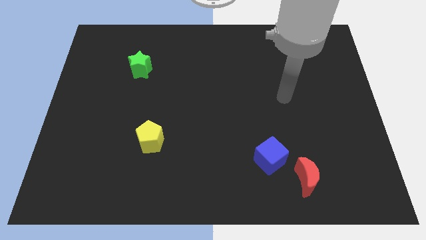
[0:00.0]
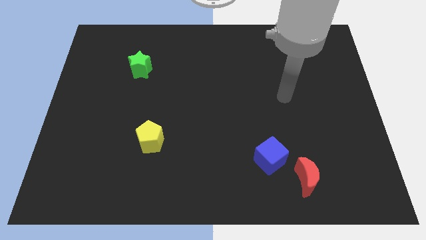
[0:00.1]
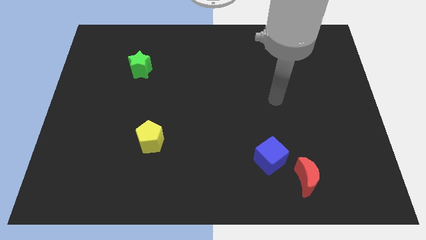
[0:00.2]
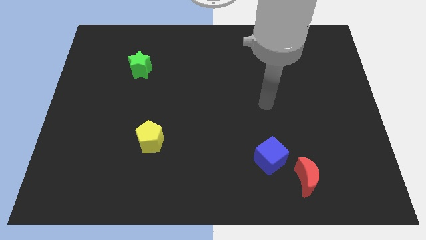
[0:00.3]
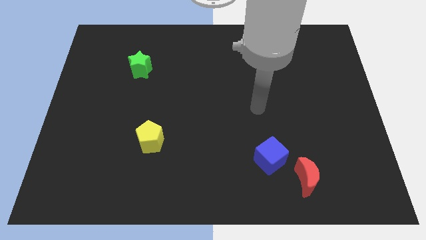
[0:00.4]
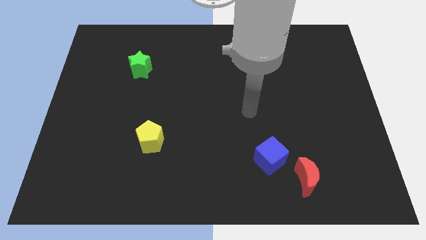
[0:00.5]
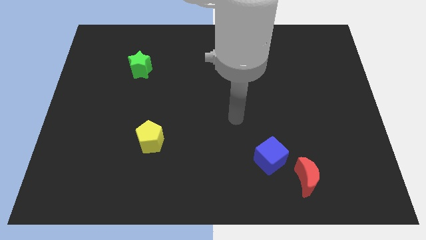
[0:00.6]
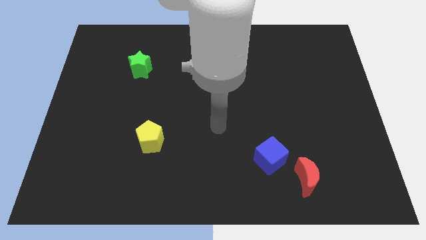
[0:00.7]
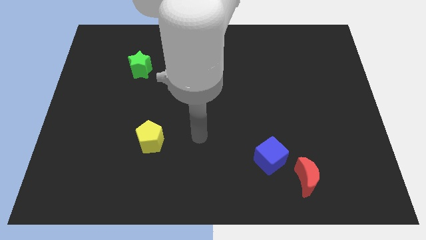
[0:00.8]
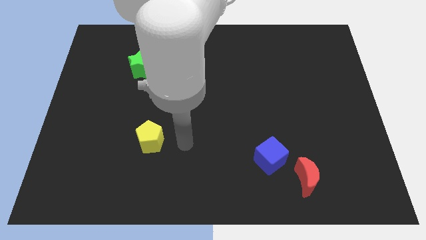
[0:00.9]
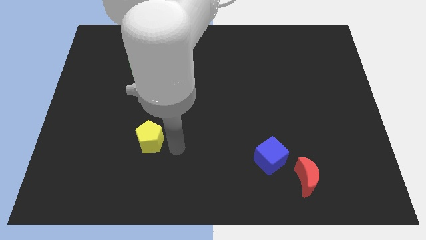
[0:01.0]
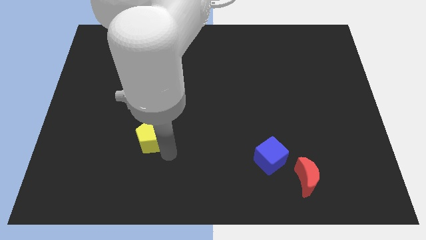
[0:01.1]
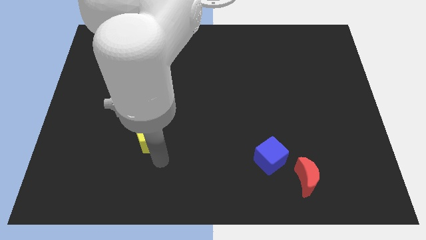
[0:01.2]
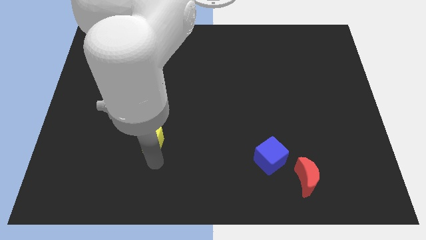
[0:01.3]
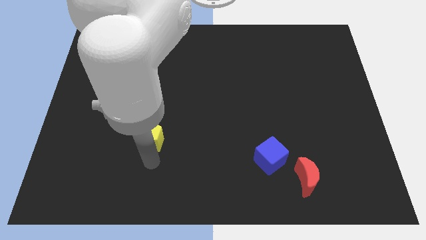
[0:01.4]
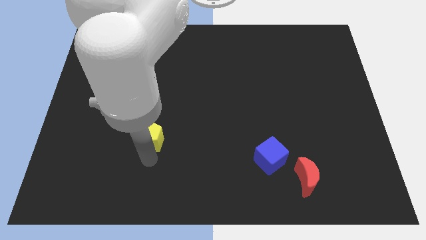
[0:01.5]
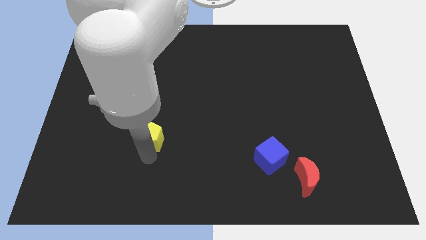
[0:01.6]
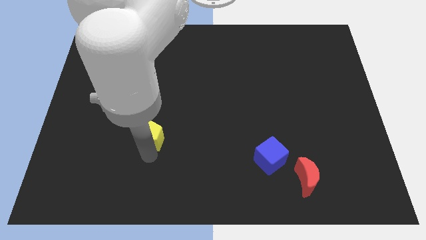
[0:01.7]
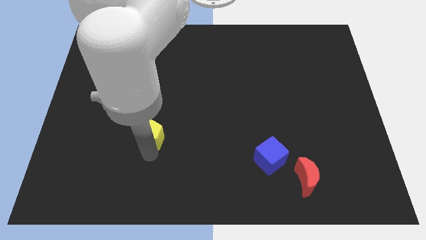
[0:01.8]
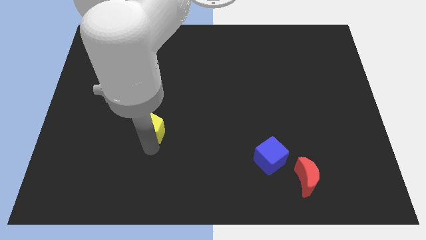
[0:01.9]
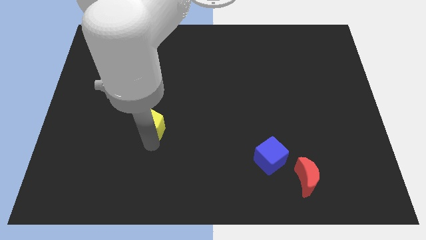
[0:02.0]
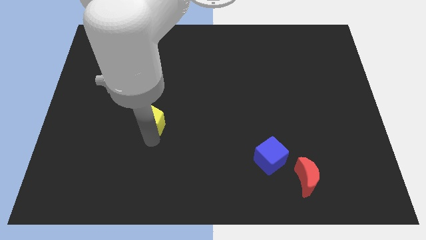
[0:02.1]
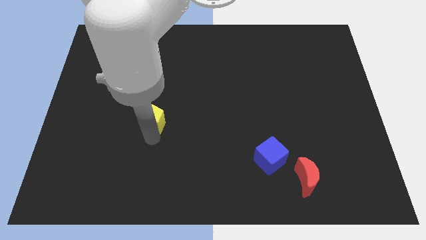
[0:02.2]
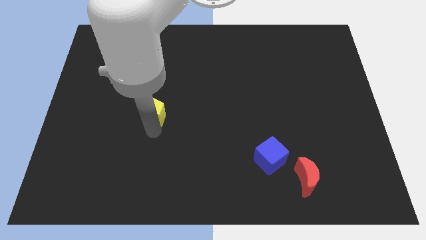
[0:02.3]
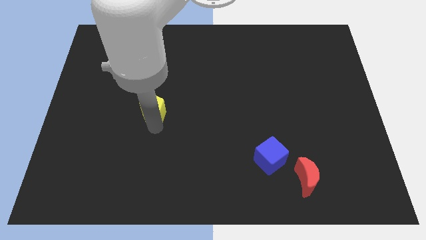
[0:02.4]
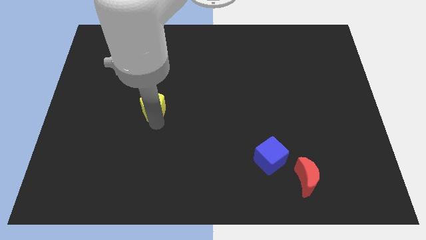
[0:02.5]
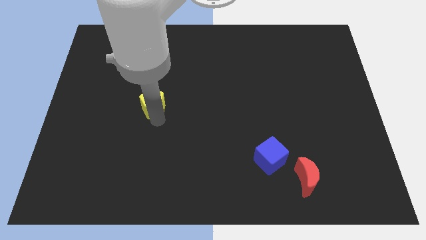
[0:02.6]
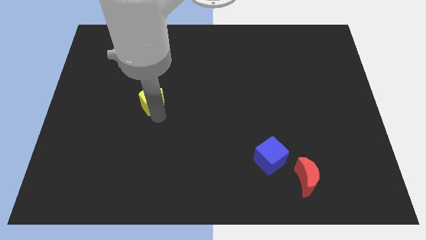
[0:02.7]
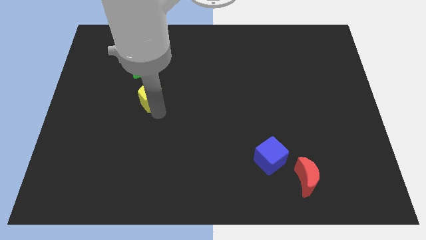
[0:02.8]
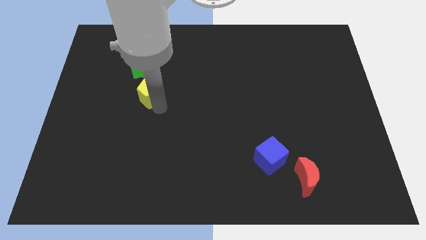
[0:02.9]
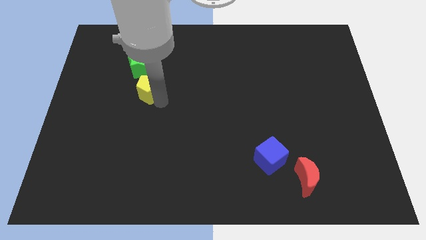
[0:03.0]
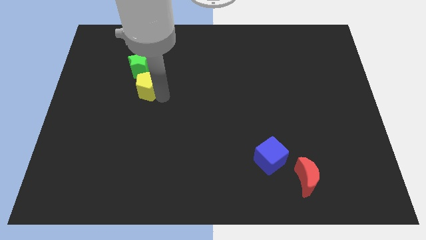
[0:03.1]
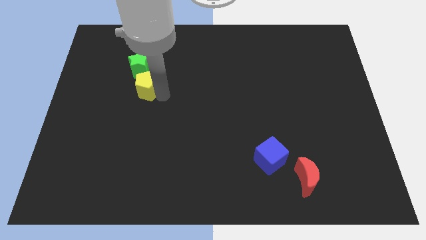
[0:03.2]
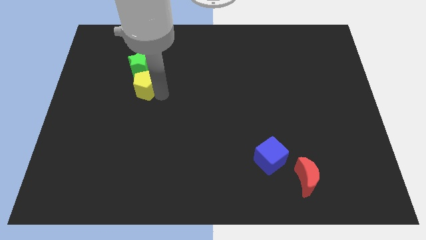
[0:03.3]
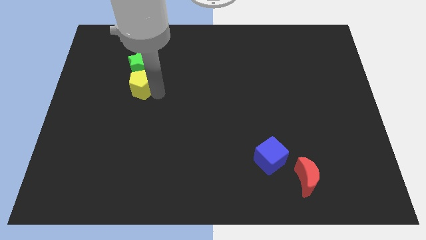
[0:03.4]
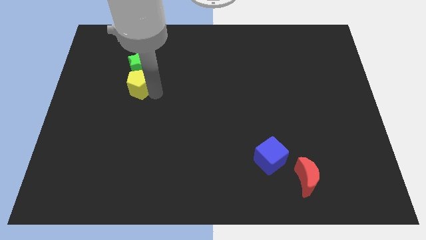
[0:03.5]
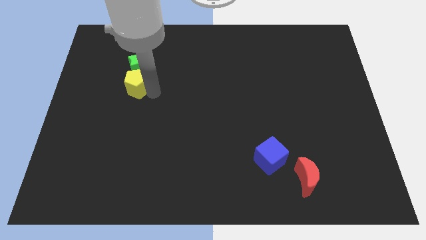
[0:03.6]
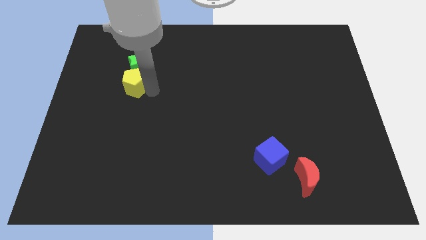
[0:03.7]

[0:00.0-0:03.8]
slide the pentagon towards the green block

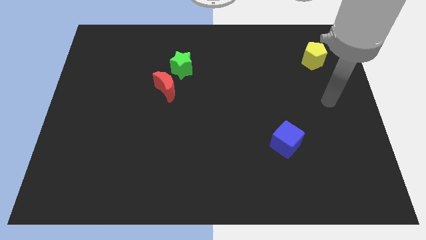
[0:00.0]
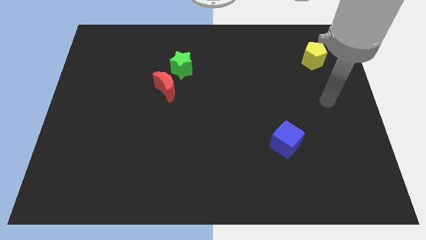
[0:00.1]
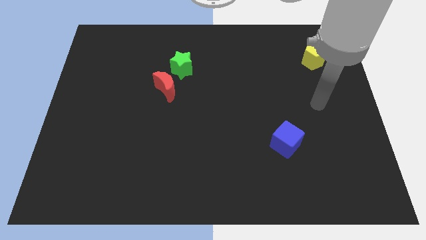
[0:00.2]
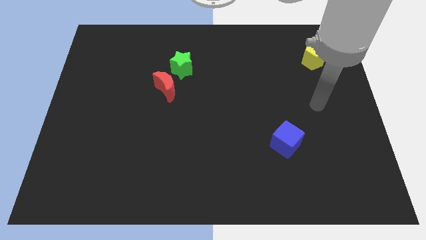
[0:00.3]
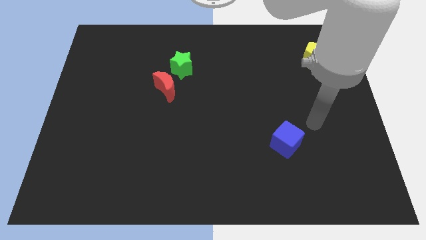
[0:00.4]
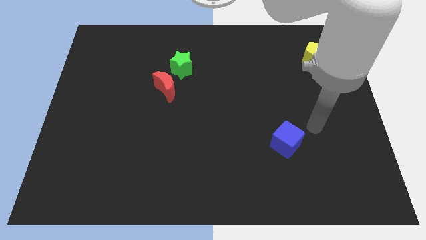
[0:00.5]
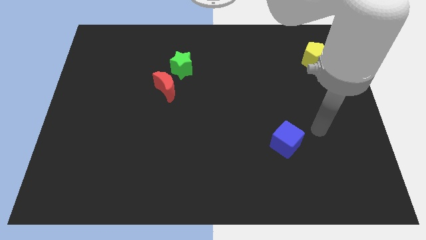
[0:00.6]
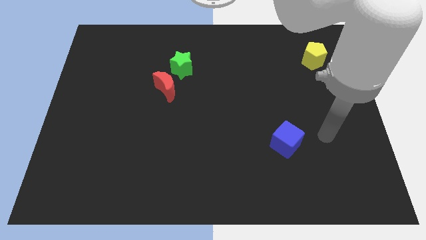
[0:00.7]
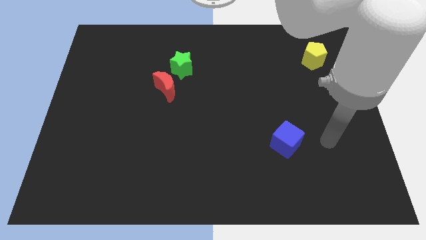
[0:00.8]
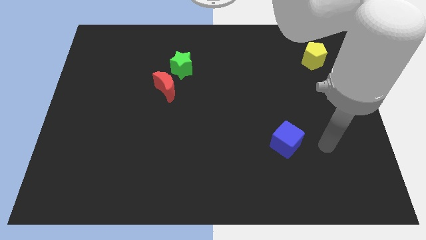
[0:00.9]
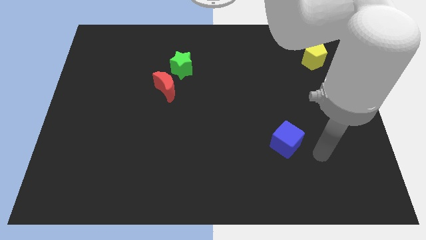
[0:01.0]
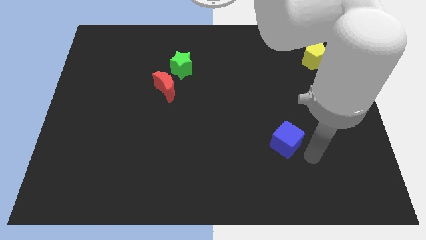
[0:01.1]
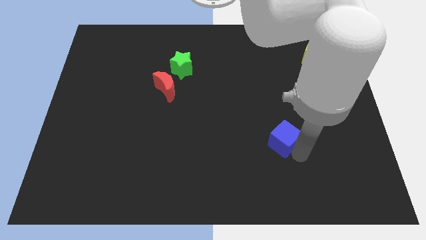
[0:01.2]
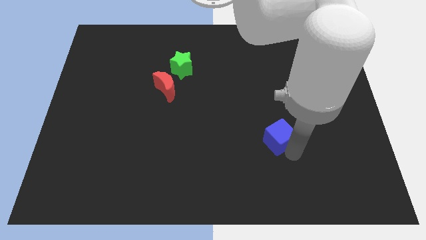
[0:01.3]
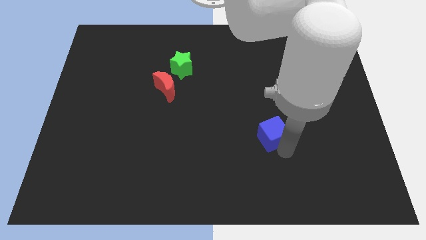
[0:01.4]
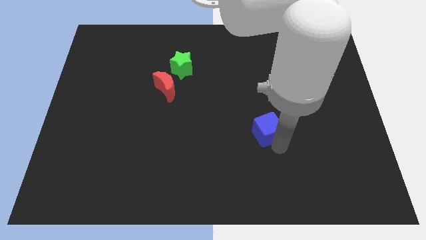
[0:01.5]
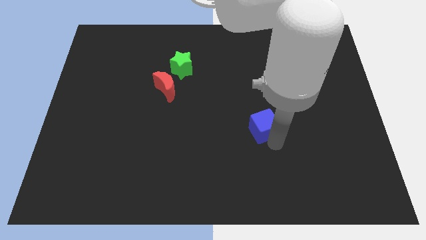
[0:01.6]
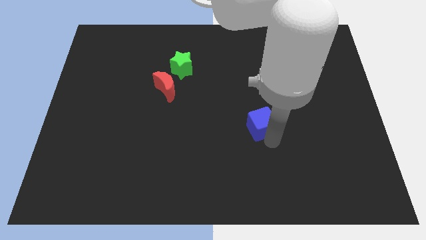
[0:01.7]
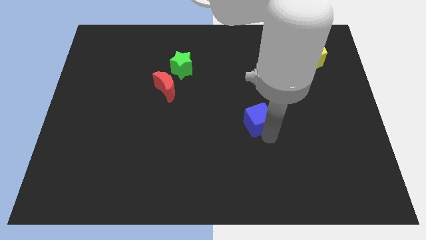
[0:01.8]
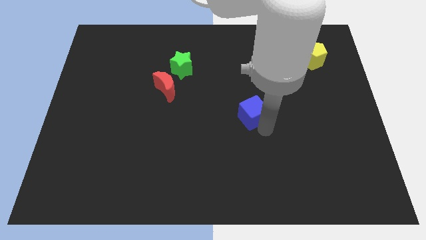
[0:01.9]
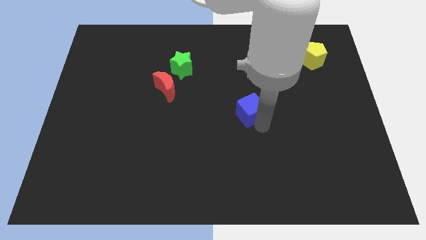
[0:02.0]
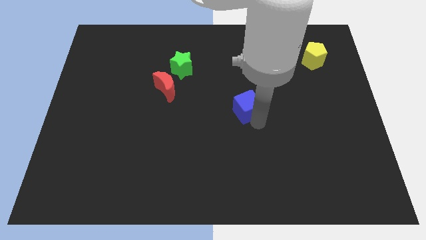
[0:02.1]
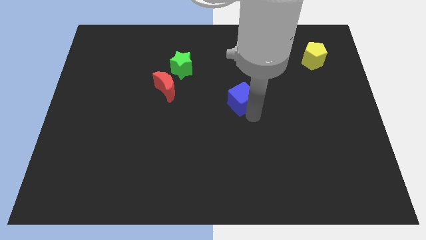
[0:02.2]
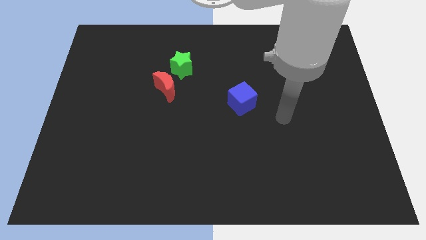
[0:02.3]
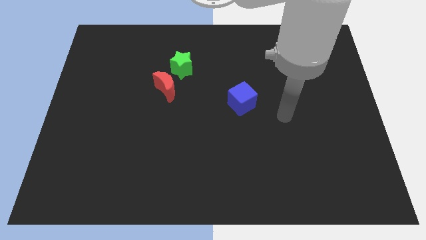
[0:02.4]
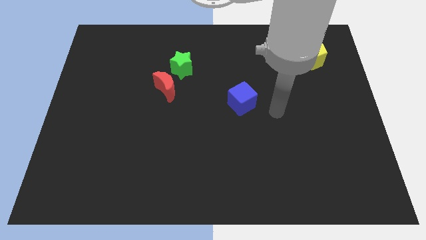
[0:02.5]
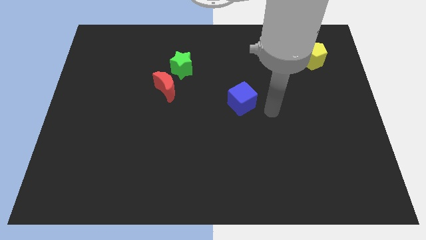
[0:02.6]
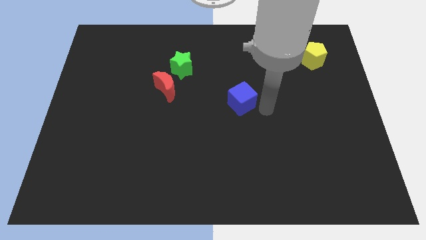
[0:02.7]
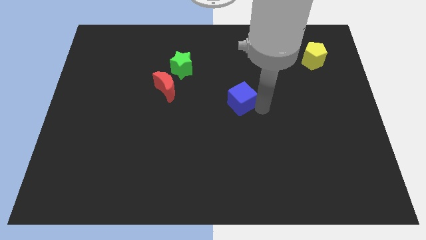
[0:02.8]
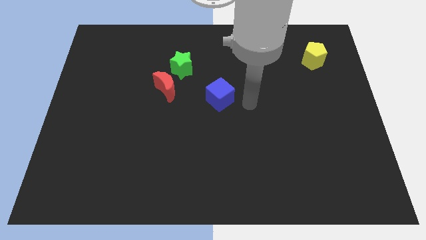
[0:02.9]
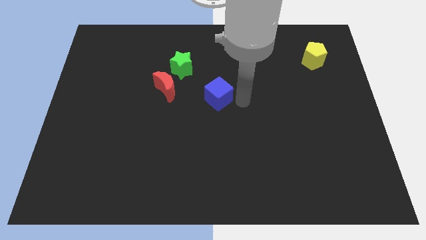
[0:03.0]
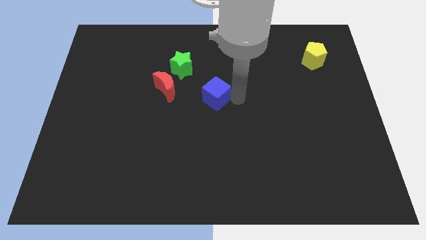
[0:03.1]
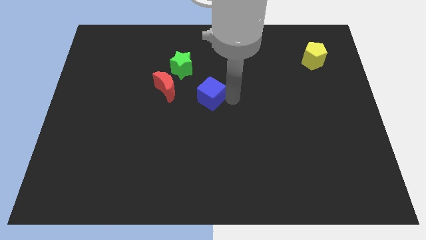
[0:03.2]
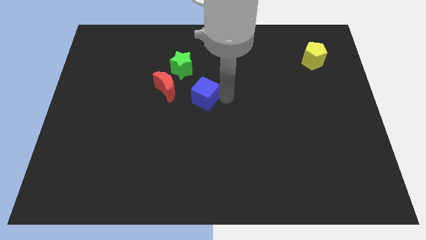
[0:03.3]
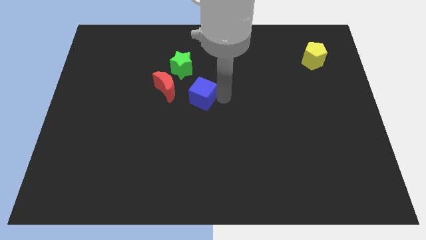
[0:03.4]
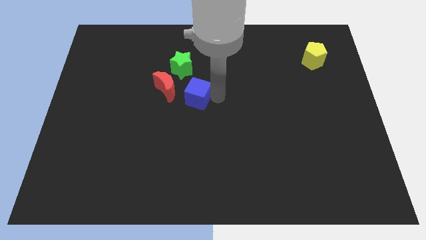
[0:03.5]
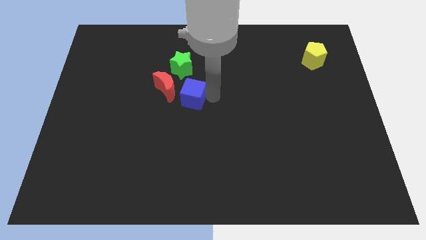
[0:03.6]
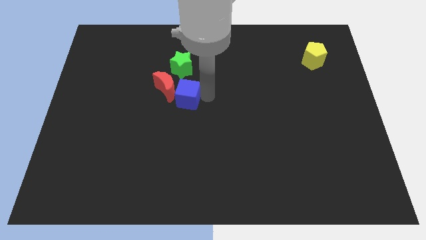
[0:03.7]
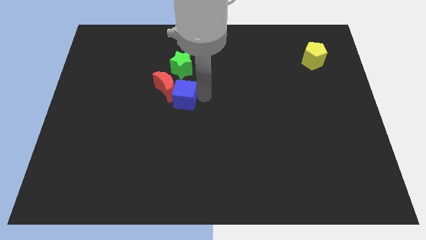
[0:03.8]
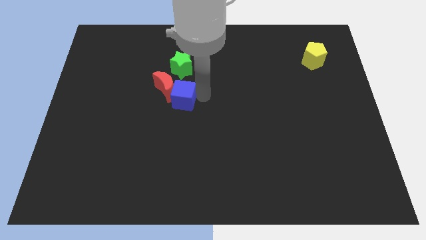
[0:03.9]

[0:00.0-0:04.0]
slide the cube to the red block

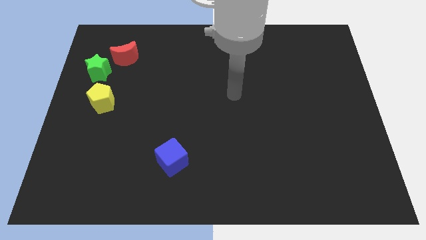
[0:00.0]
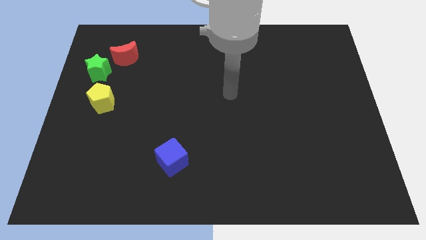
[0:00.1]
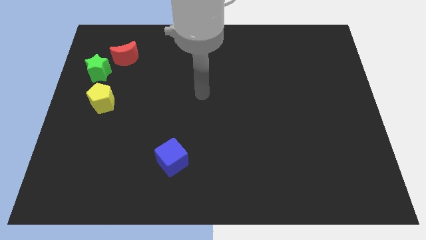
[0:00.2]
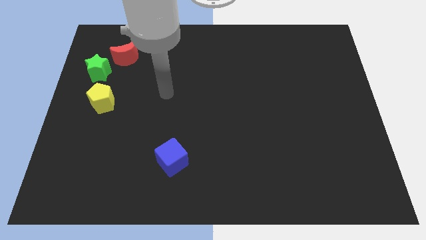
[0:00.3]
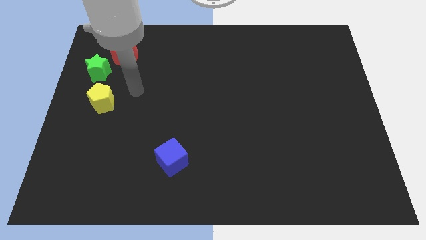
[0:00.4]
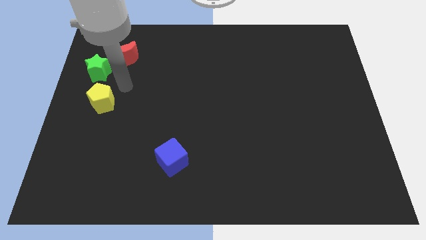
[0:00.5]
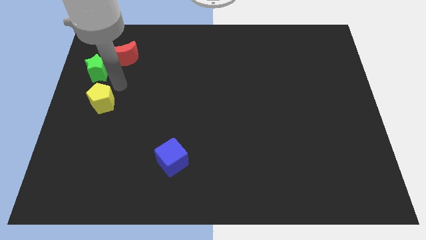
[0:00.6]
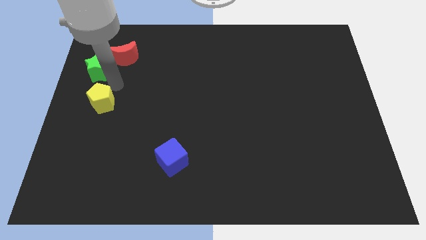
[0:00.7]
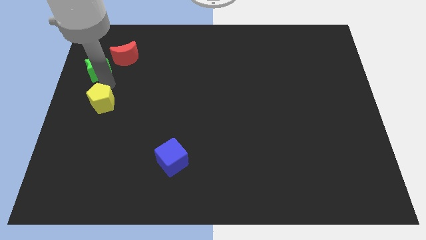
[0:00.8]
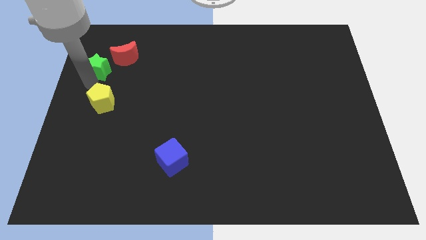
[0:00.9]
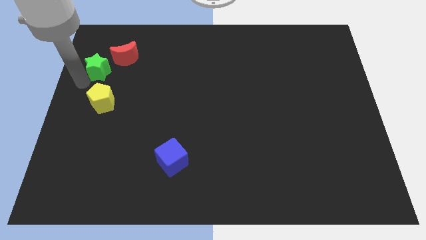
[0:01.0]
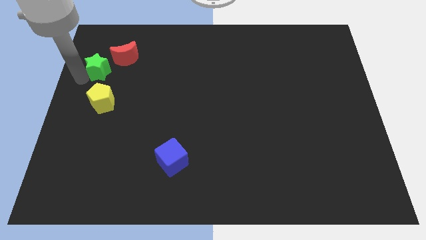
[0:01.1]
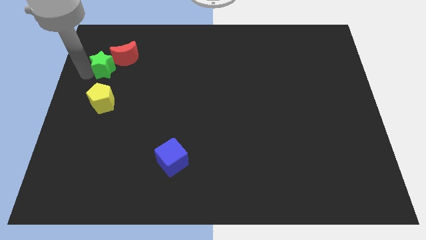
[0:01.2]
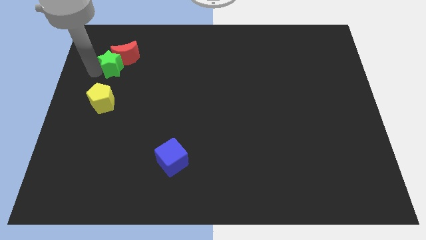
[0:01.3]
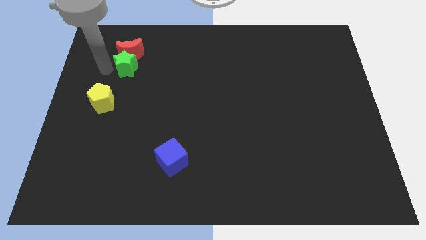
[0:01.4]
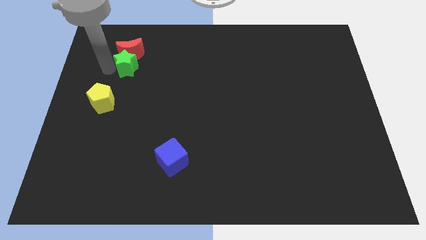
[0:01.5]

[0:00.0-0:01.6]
put the green star next to the moon
